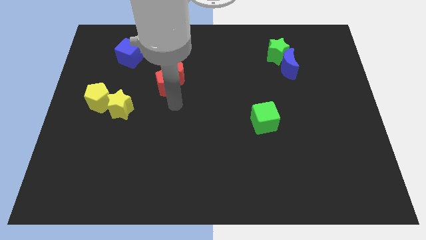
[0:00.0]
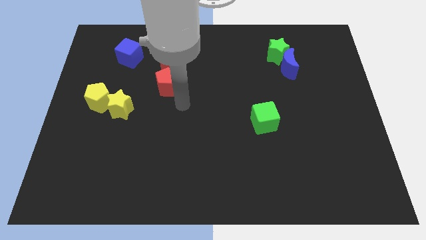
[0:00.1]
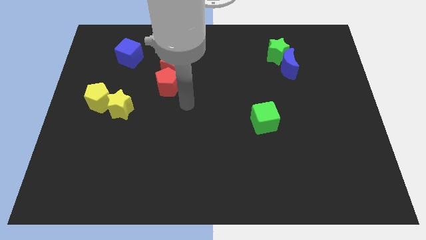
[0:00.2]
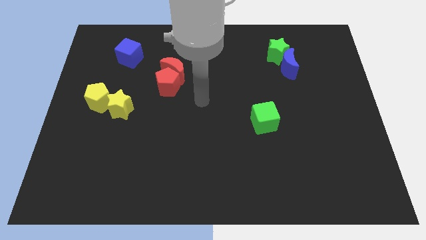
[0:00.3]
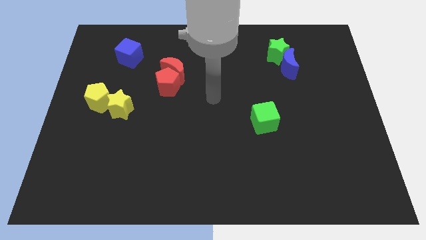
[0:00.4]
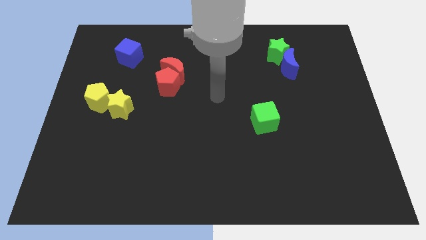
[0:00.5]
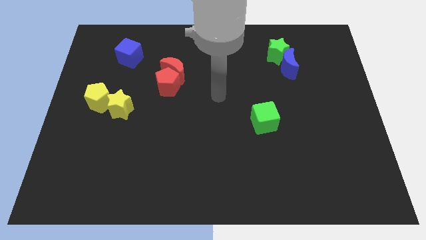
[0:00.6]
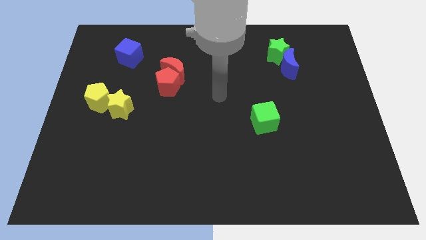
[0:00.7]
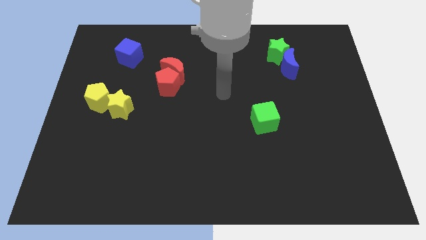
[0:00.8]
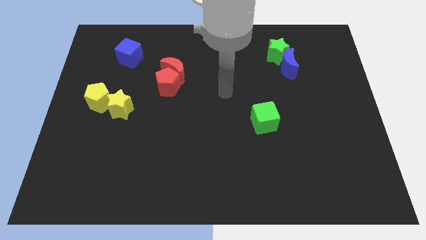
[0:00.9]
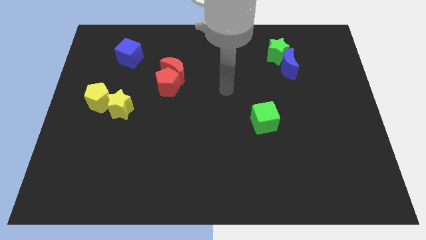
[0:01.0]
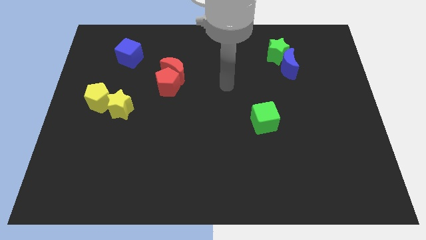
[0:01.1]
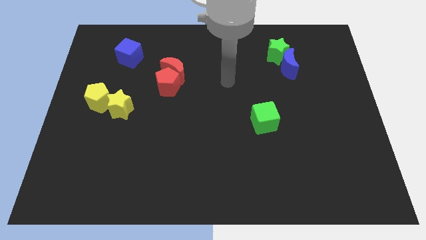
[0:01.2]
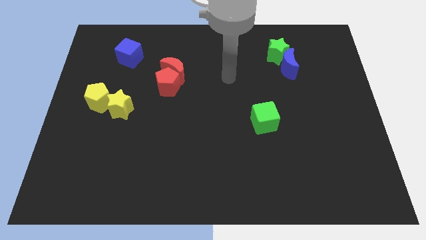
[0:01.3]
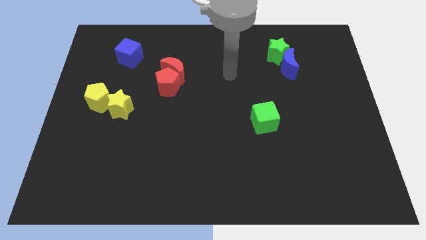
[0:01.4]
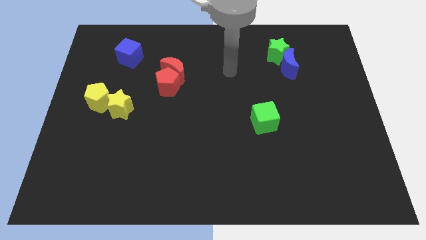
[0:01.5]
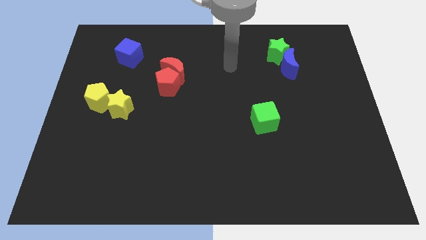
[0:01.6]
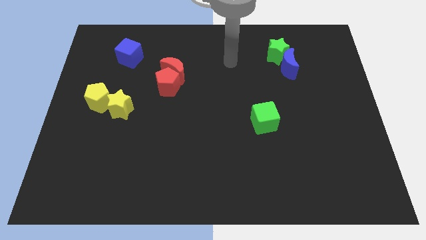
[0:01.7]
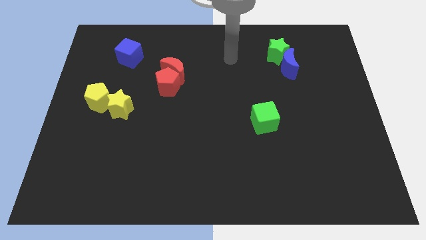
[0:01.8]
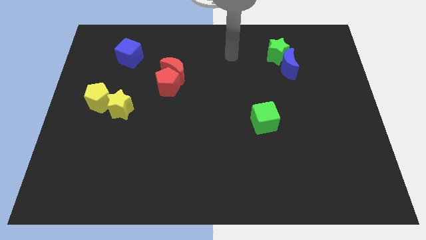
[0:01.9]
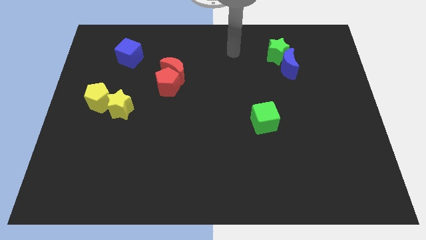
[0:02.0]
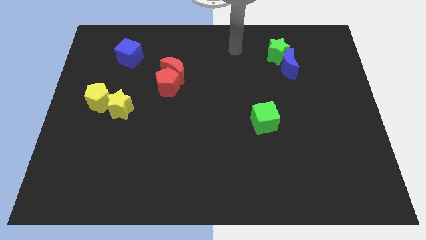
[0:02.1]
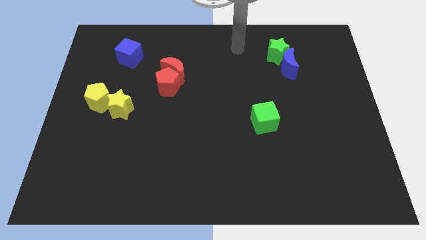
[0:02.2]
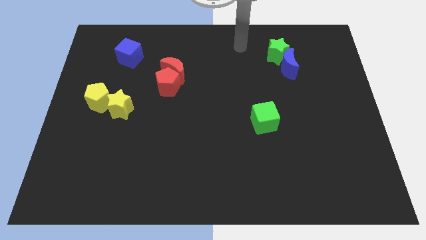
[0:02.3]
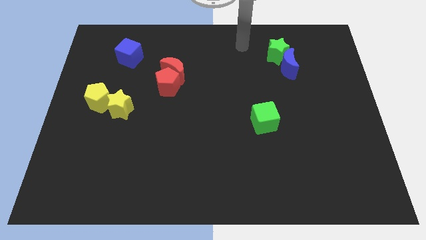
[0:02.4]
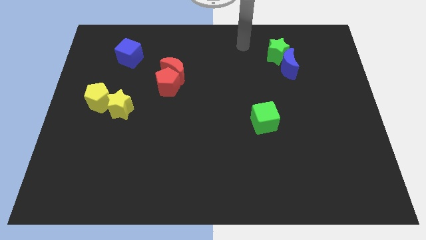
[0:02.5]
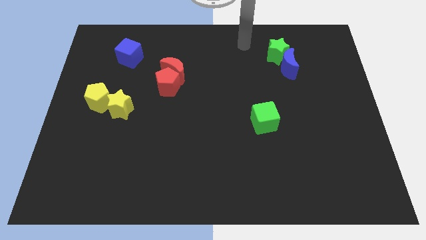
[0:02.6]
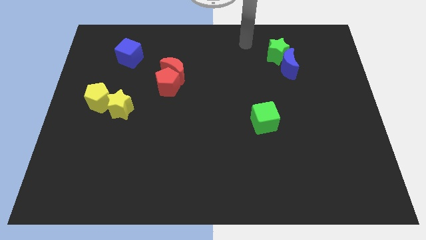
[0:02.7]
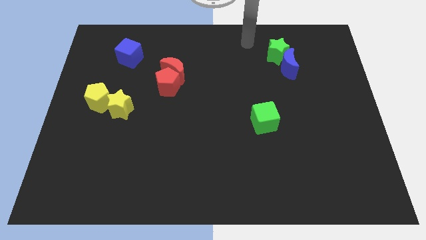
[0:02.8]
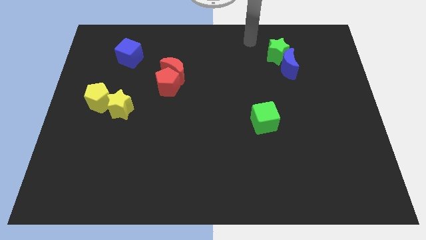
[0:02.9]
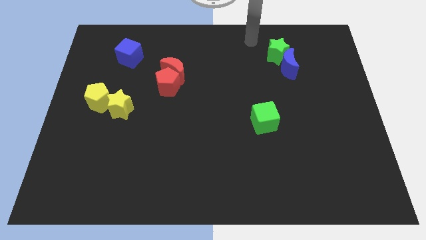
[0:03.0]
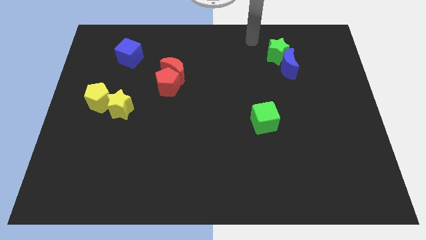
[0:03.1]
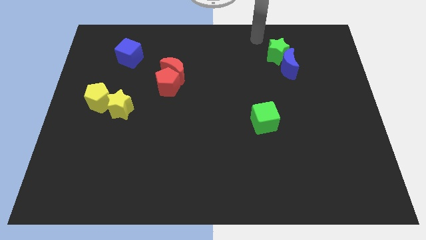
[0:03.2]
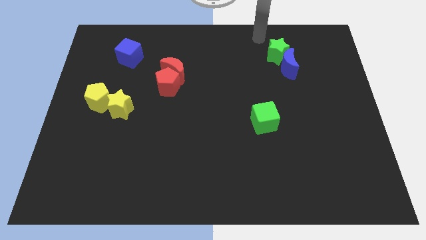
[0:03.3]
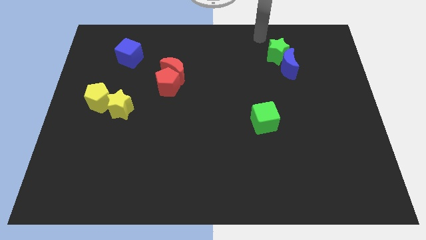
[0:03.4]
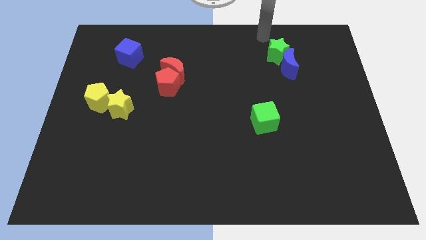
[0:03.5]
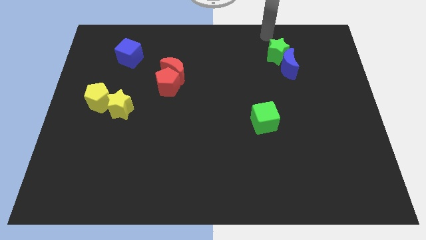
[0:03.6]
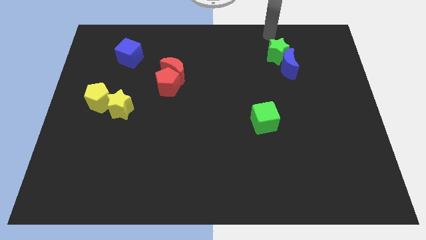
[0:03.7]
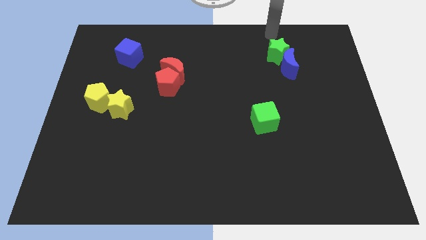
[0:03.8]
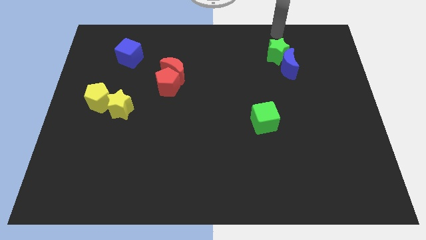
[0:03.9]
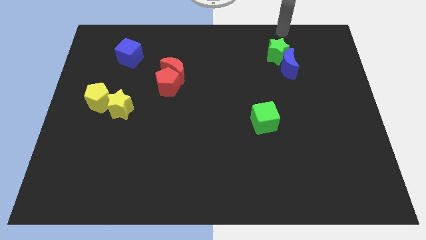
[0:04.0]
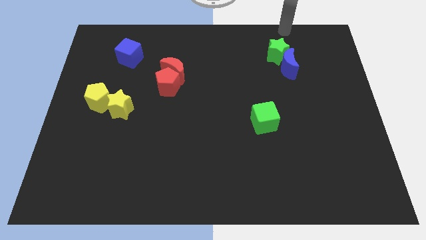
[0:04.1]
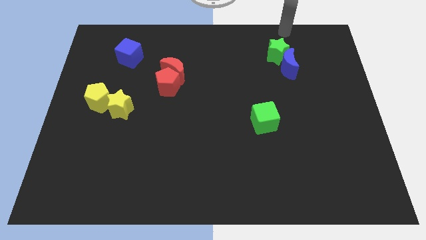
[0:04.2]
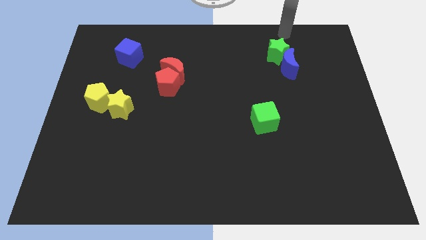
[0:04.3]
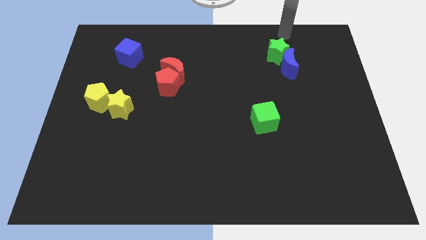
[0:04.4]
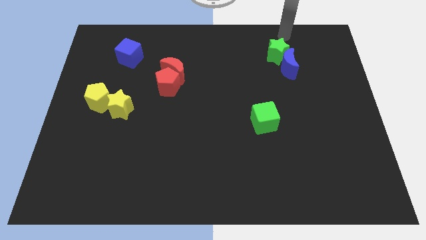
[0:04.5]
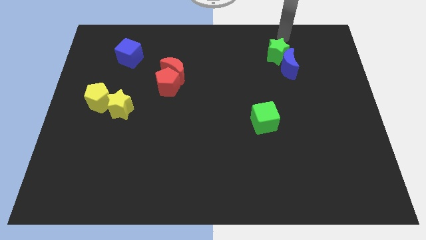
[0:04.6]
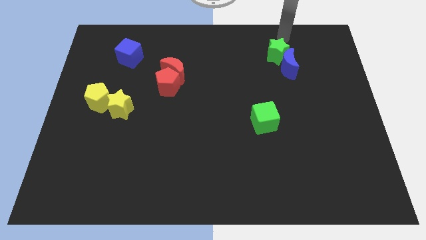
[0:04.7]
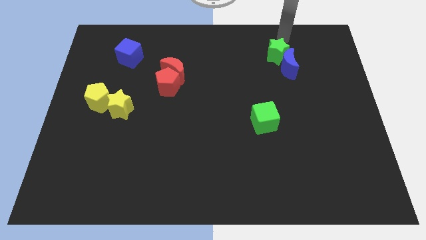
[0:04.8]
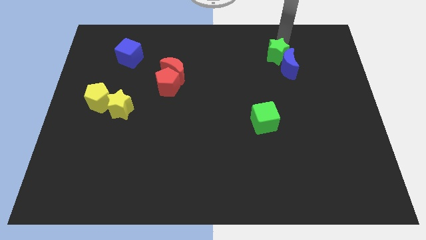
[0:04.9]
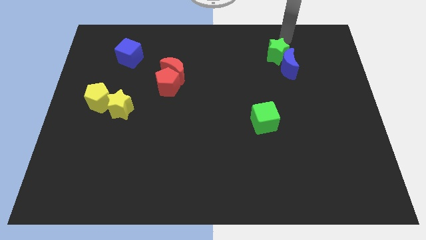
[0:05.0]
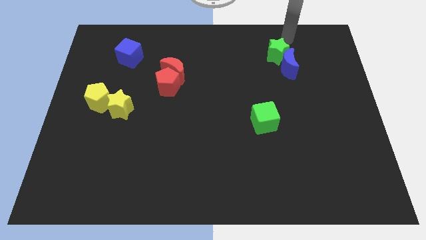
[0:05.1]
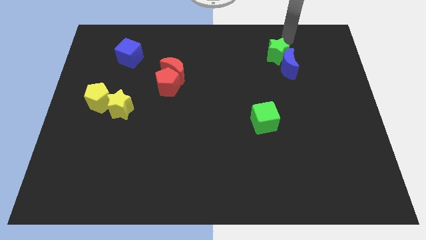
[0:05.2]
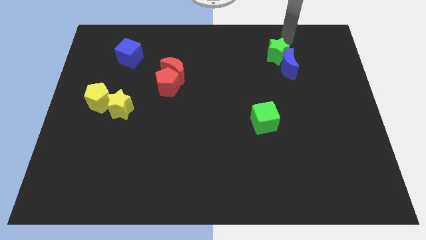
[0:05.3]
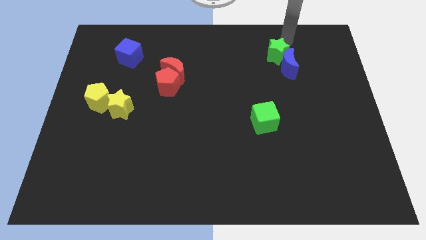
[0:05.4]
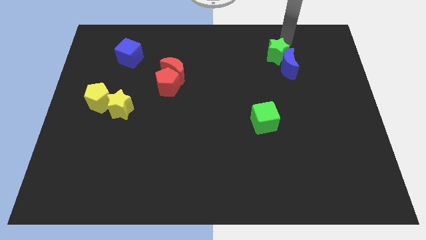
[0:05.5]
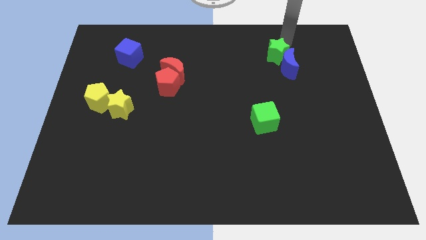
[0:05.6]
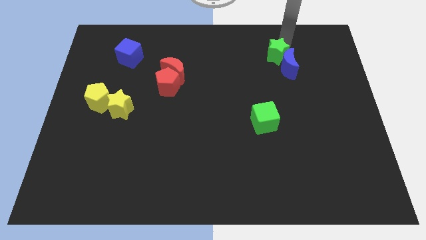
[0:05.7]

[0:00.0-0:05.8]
point your arm at the top right side of the green star

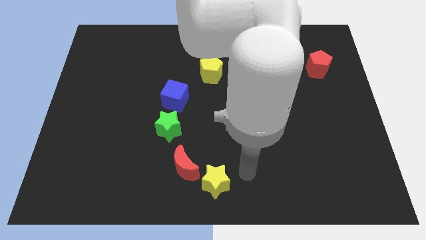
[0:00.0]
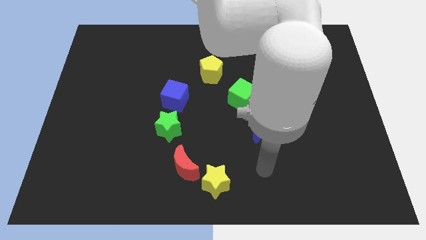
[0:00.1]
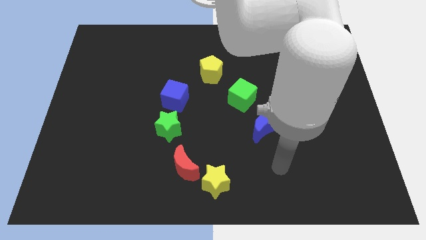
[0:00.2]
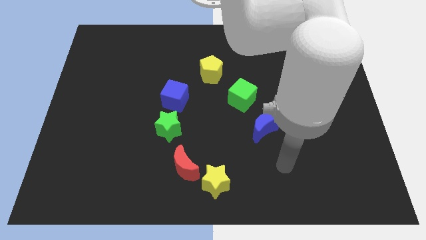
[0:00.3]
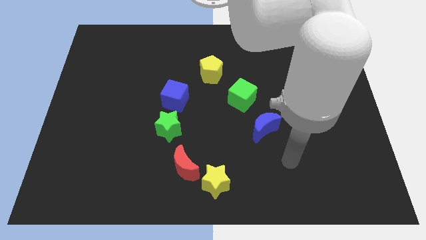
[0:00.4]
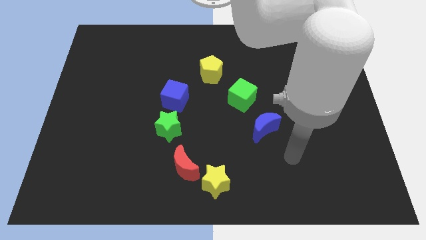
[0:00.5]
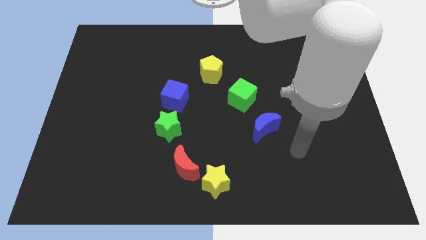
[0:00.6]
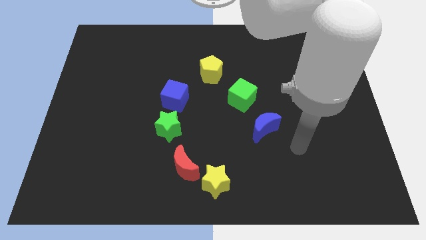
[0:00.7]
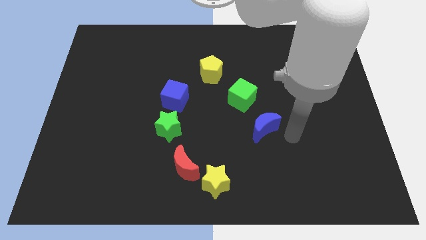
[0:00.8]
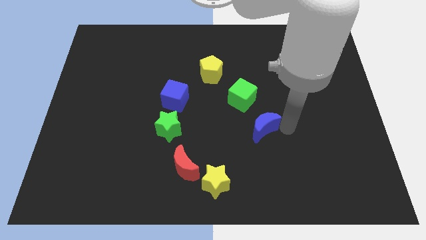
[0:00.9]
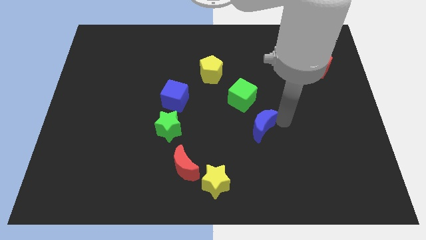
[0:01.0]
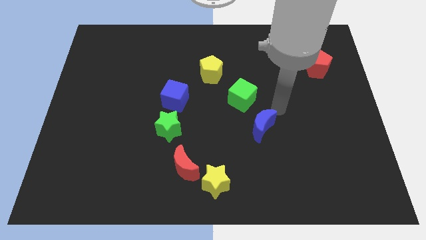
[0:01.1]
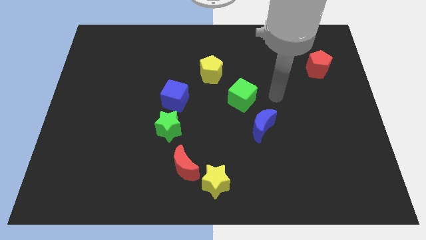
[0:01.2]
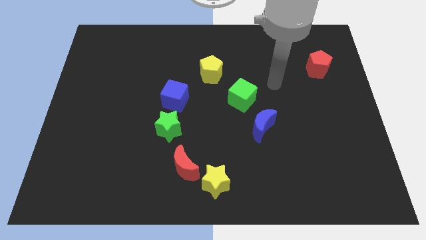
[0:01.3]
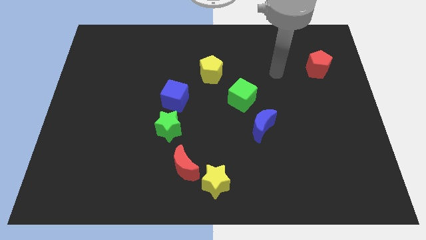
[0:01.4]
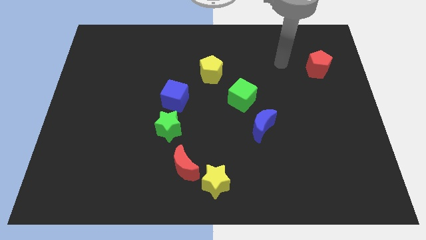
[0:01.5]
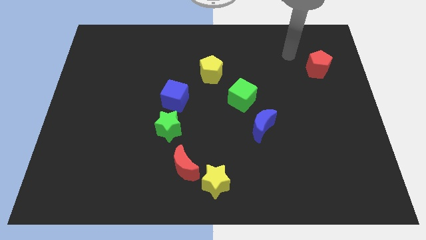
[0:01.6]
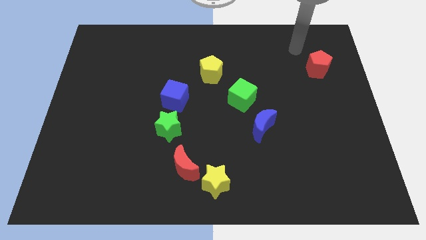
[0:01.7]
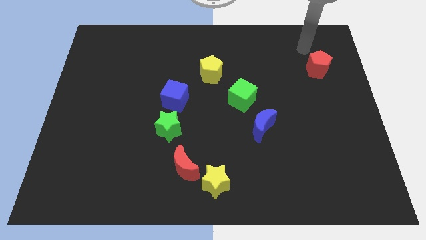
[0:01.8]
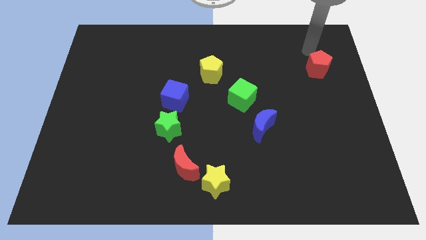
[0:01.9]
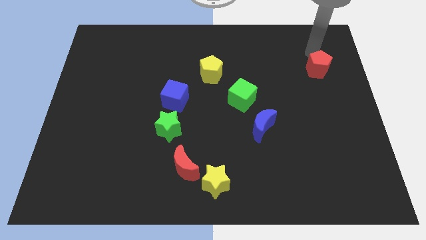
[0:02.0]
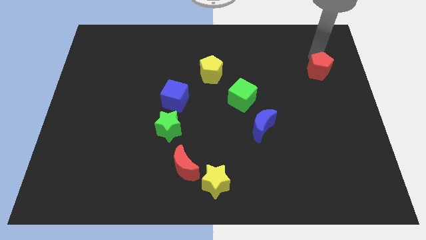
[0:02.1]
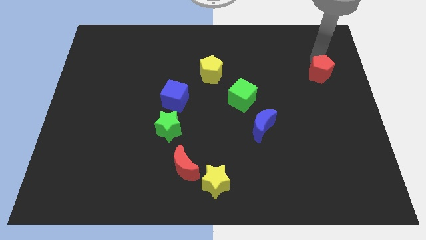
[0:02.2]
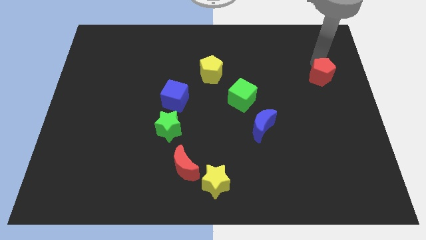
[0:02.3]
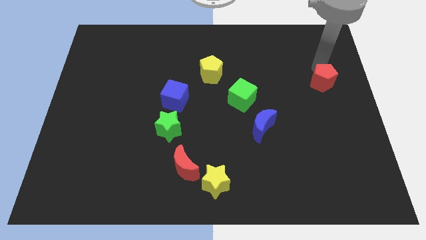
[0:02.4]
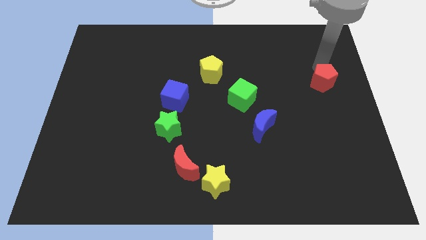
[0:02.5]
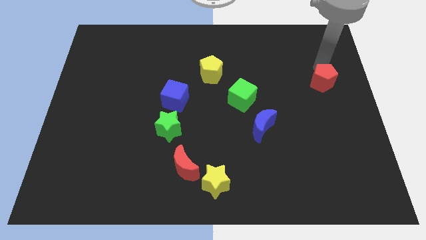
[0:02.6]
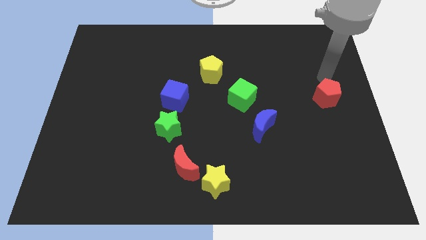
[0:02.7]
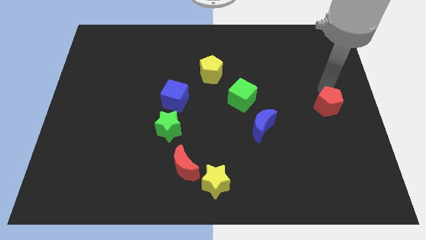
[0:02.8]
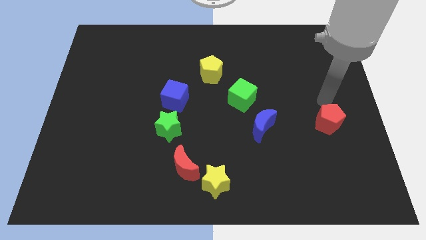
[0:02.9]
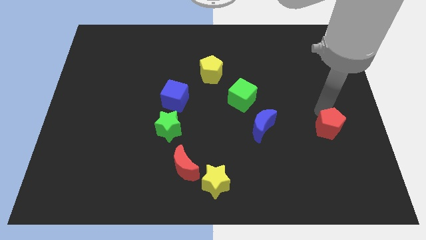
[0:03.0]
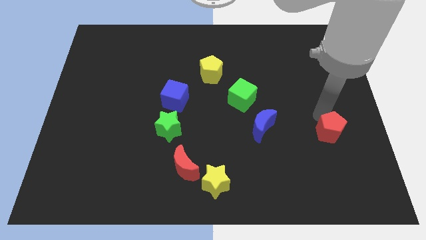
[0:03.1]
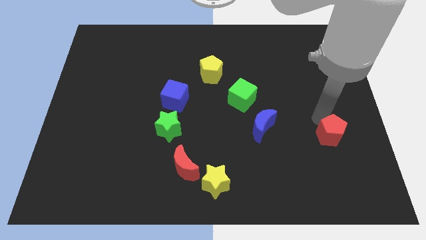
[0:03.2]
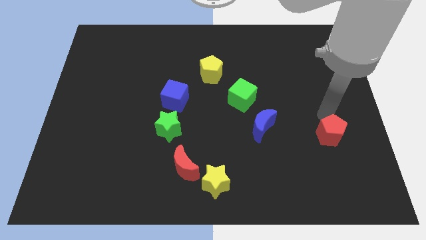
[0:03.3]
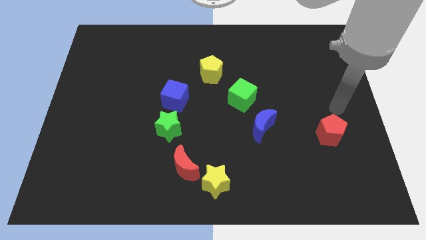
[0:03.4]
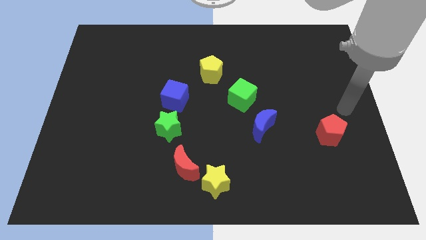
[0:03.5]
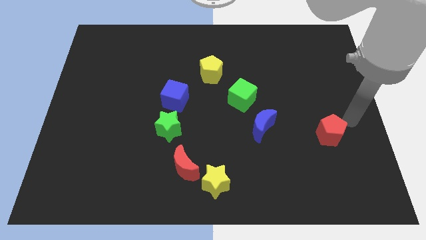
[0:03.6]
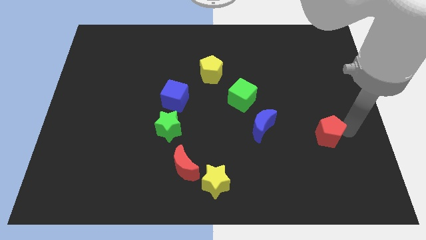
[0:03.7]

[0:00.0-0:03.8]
move the red penatgon to the right of blue moon
